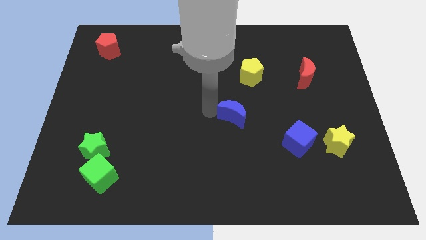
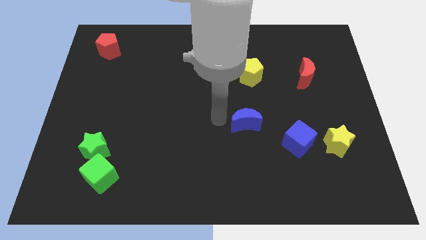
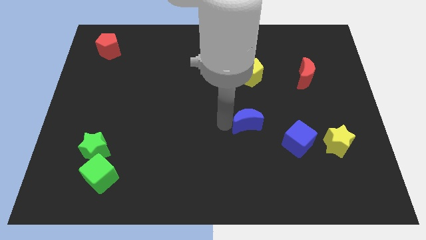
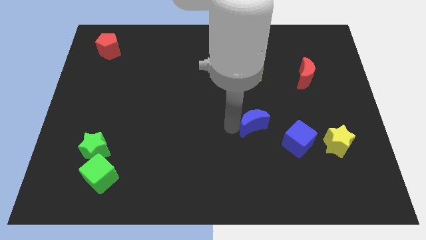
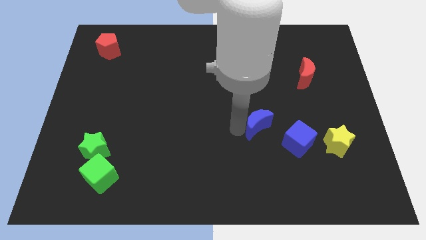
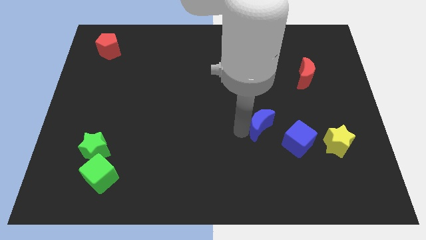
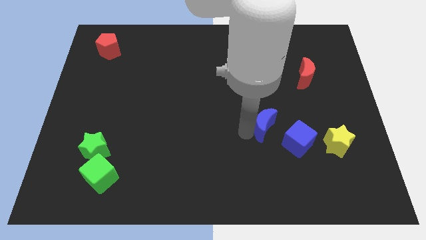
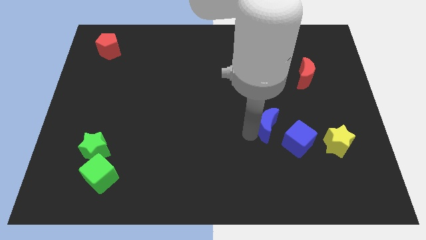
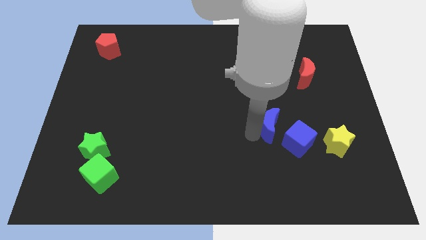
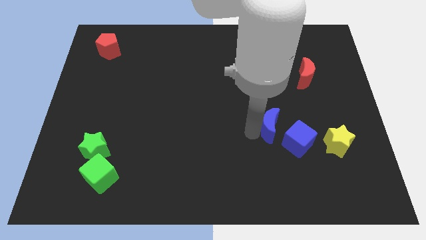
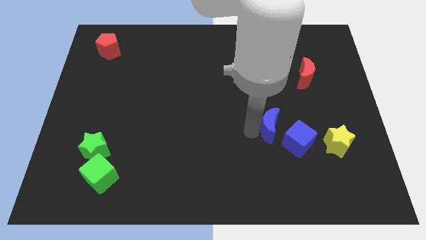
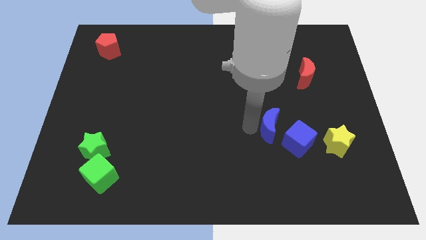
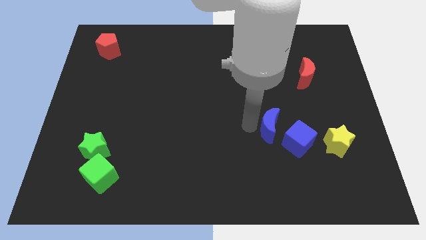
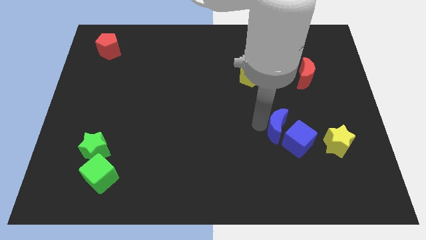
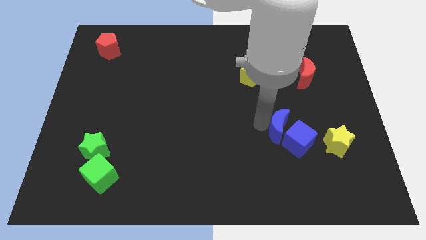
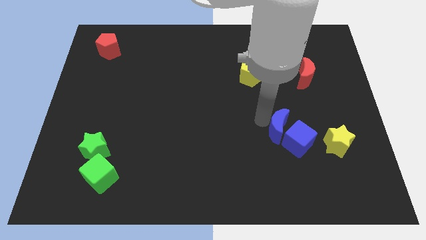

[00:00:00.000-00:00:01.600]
place the blue cube in between the yellow star and blue crescent

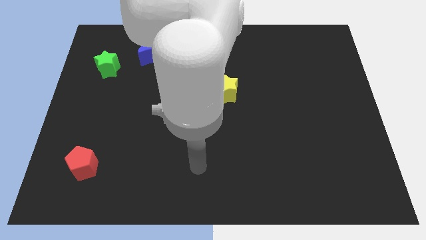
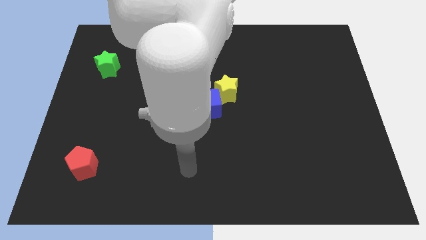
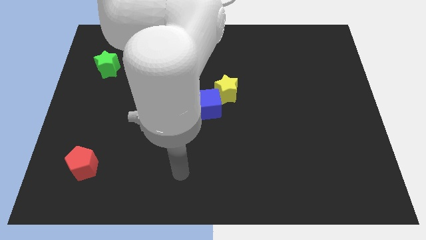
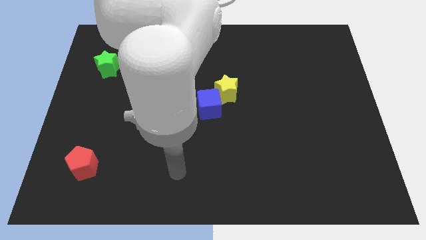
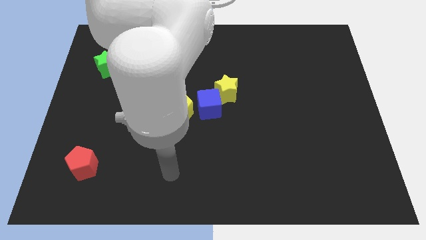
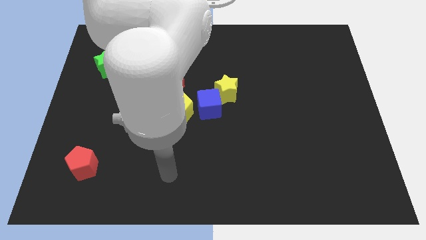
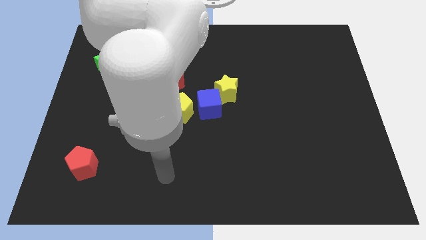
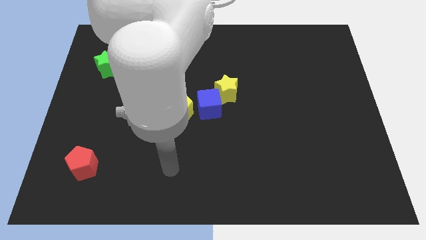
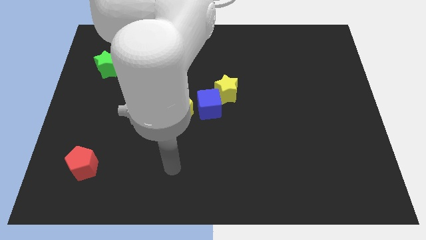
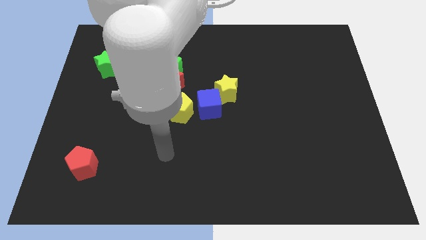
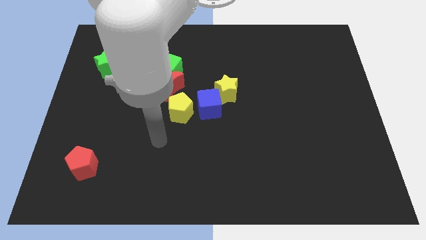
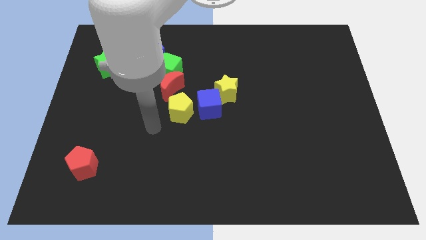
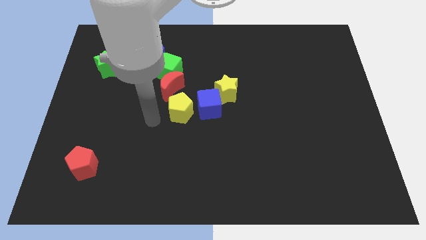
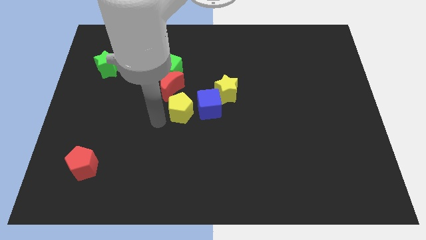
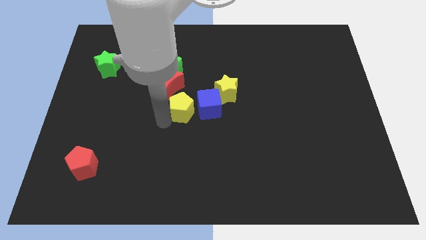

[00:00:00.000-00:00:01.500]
point the arm to the left bottom of the yellow pentagon

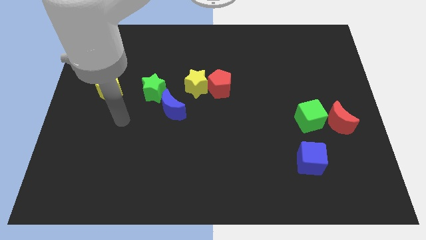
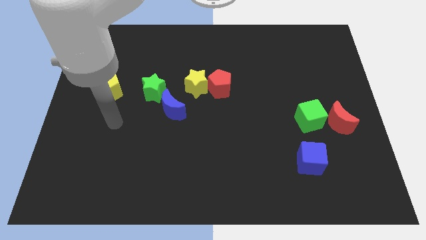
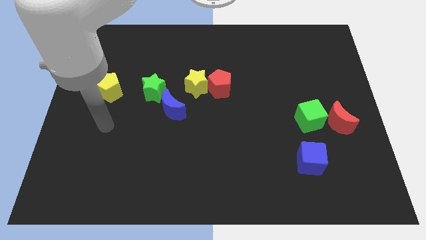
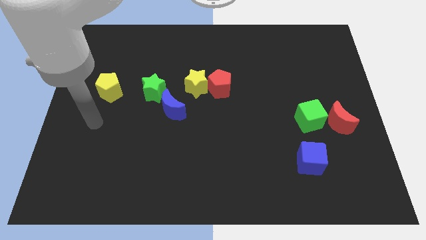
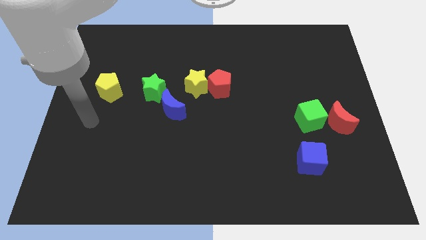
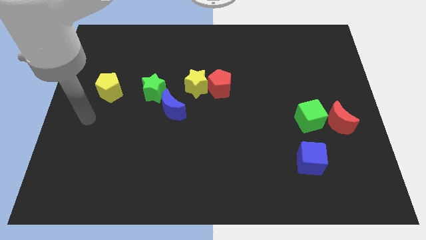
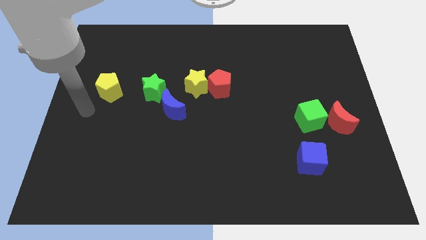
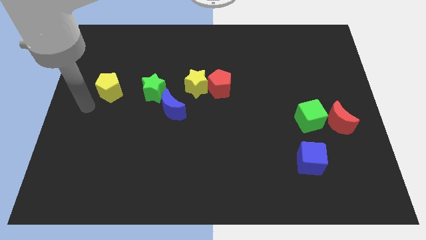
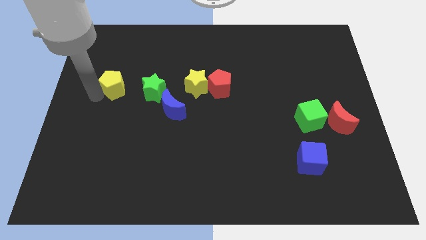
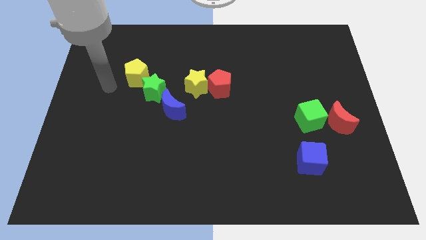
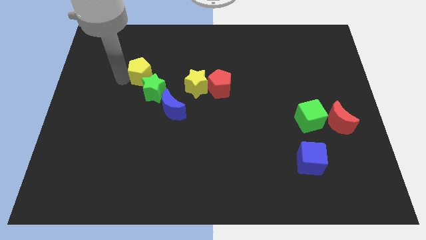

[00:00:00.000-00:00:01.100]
touch the yellow pentagon

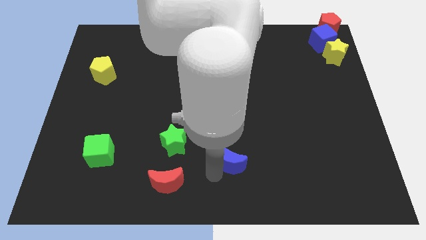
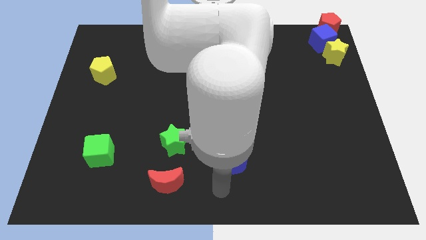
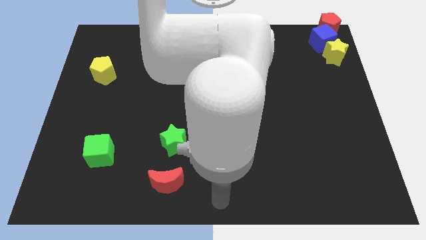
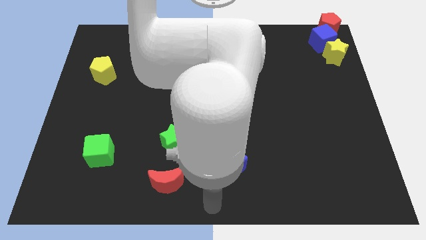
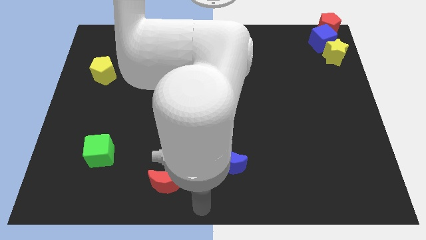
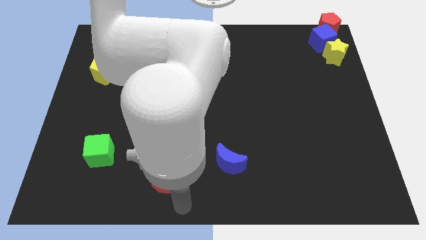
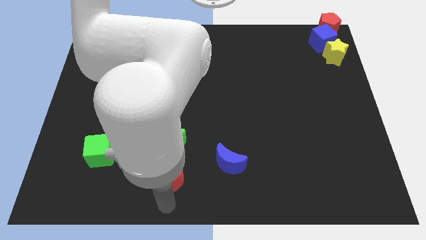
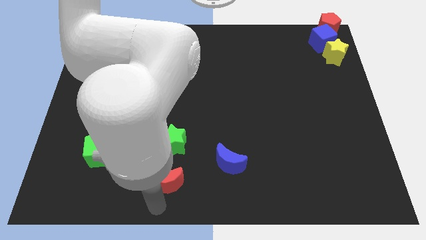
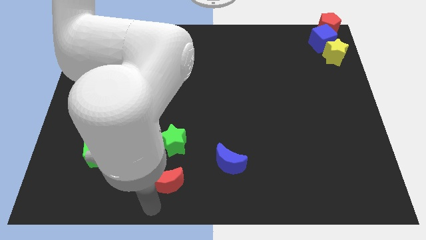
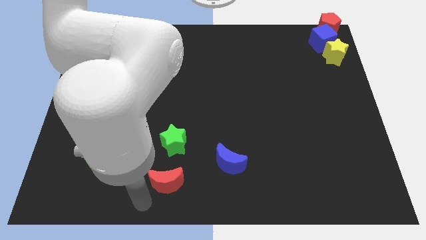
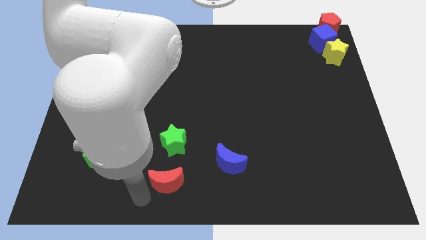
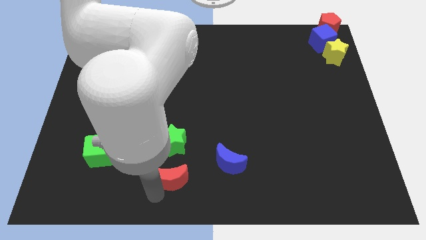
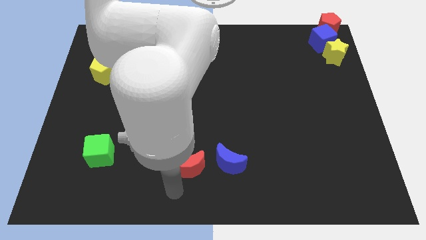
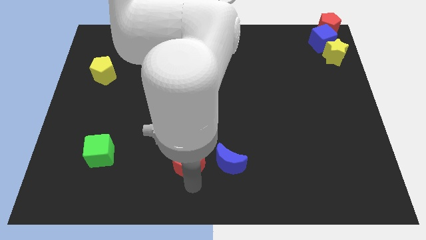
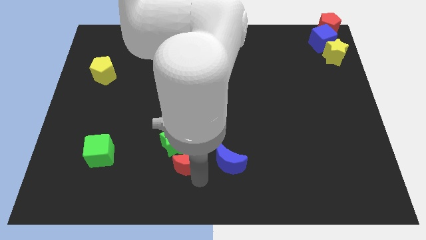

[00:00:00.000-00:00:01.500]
push the red crescent to the left of the blue crescent

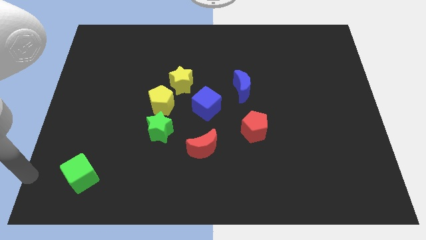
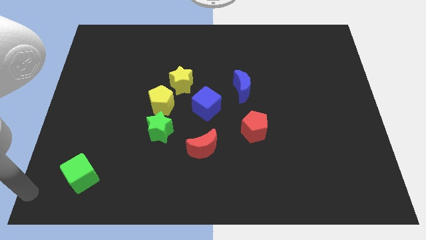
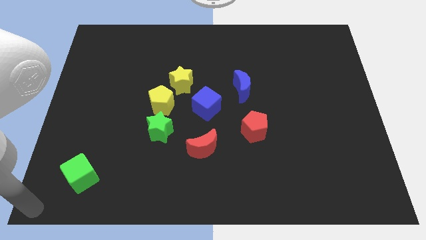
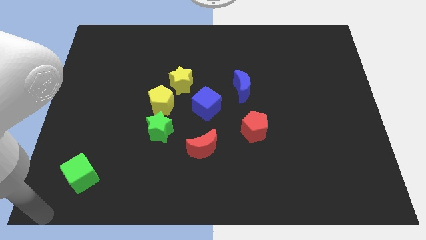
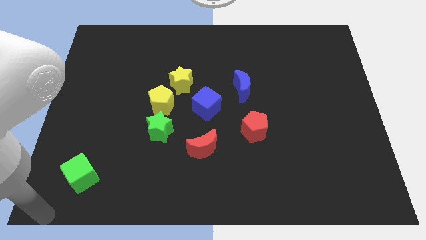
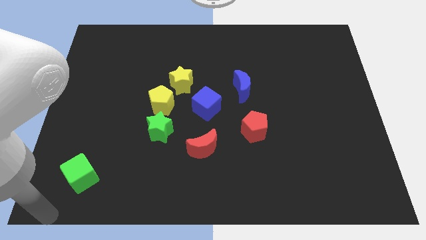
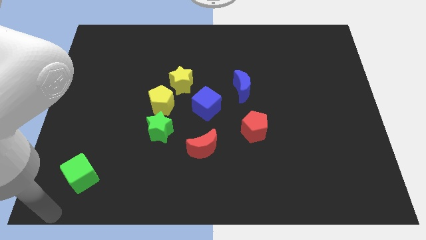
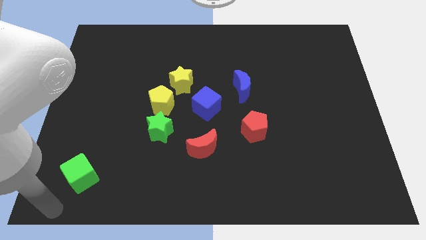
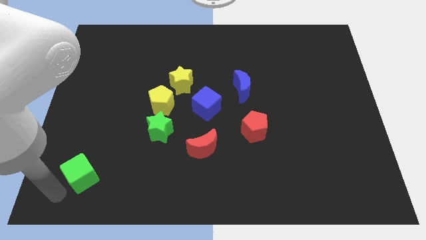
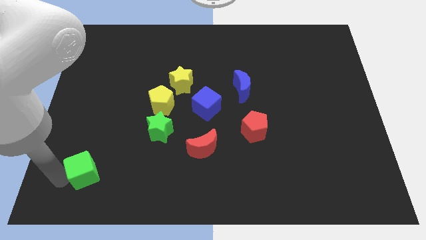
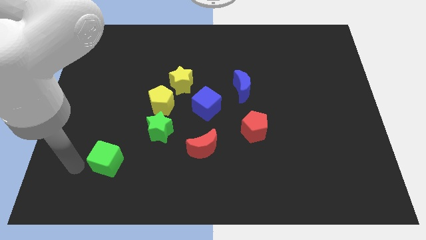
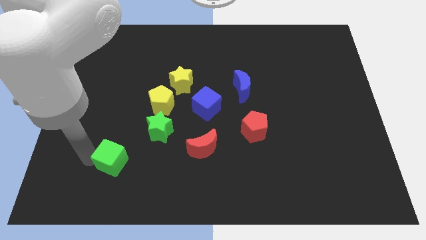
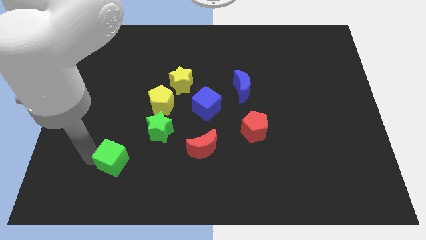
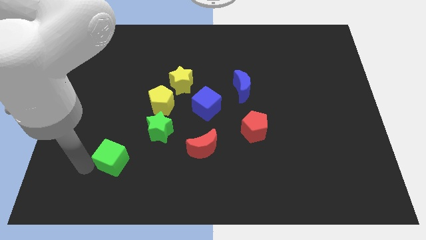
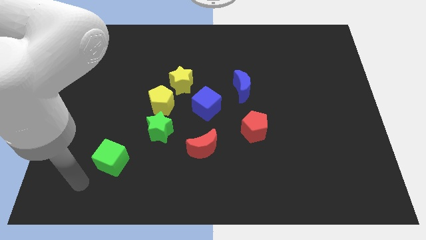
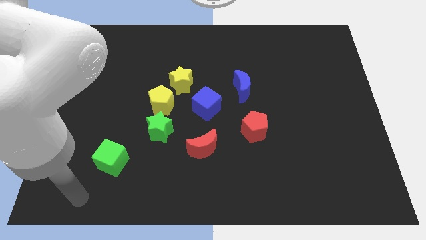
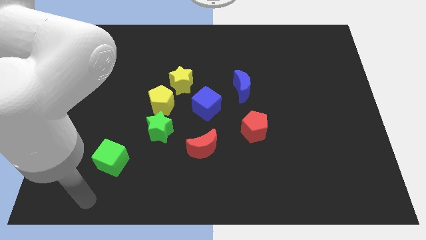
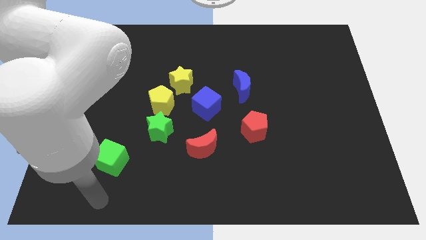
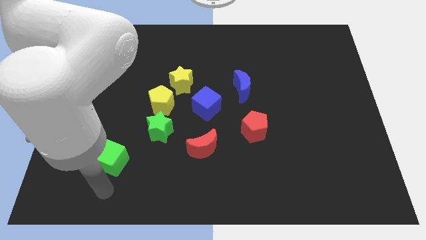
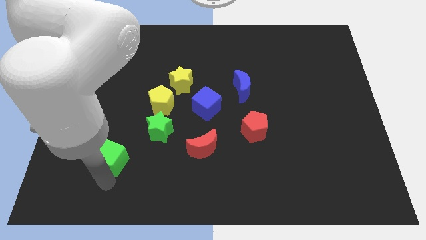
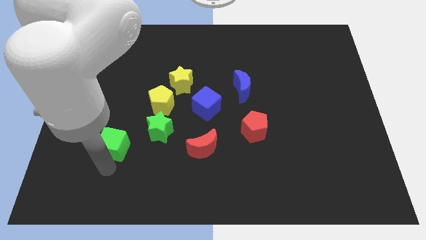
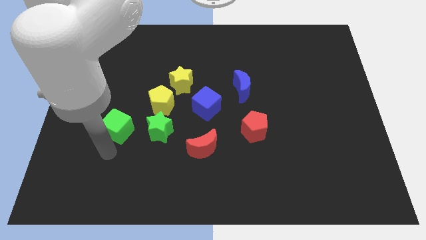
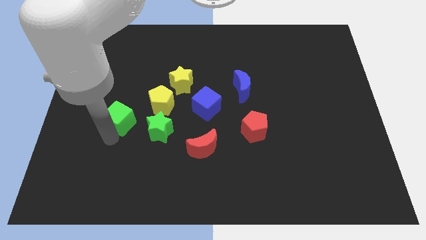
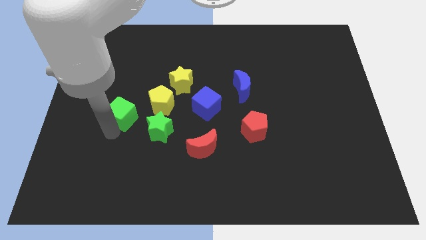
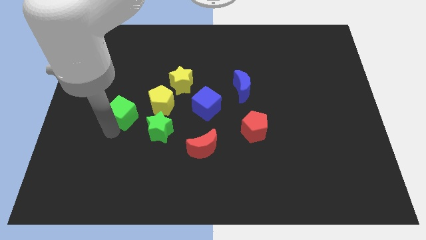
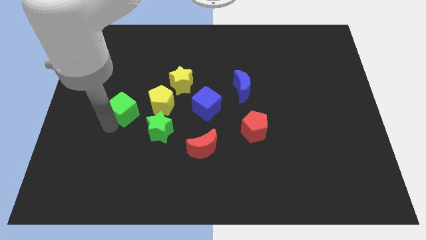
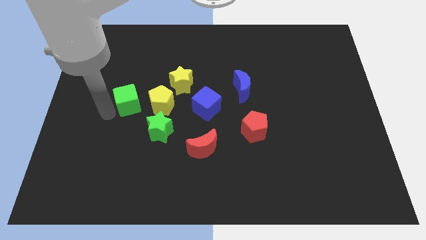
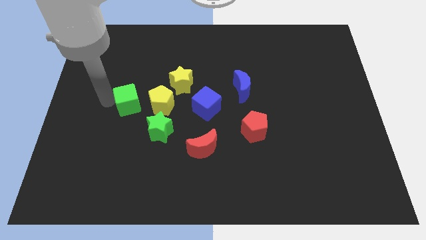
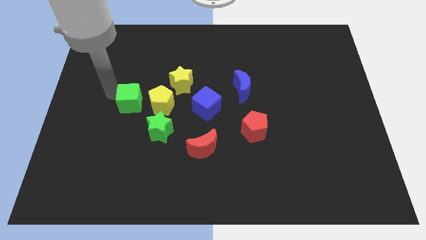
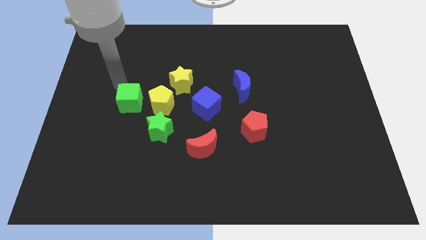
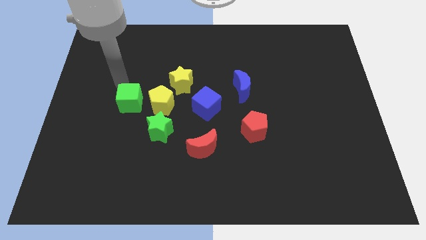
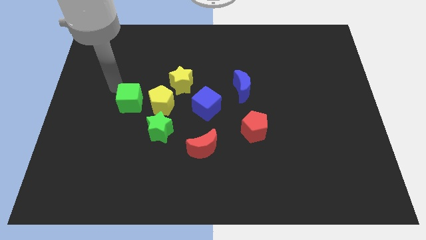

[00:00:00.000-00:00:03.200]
move green cube to the left side of the yellow pentagon

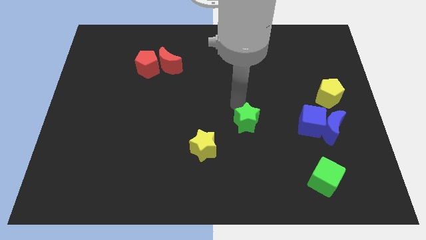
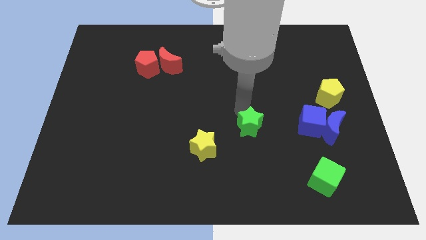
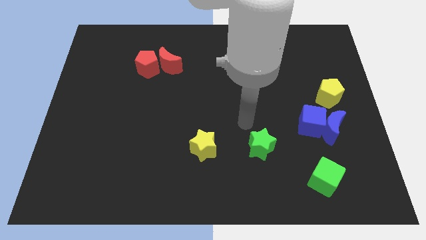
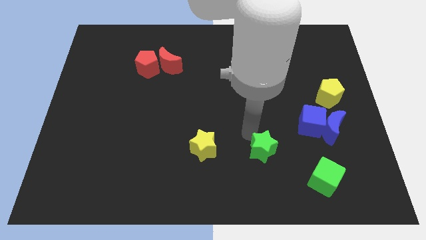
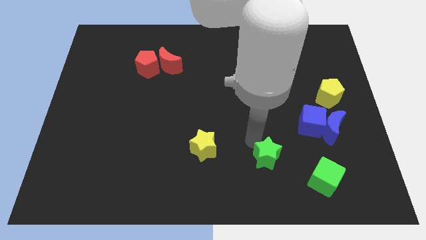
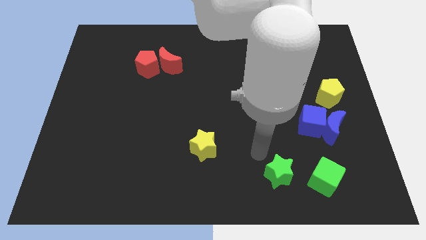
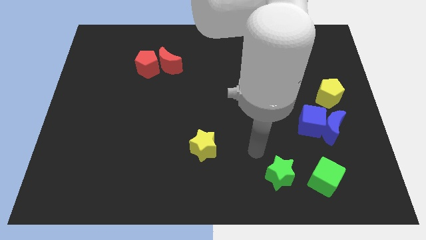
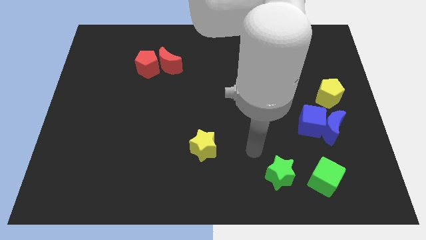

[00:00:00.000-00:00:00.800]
move the green star left to the green cube
